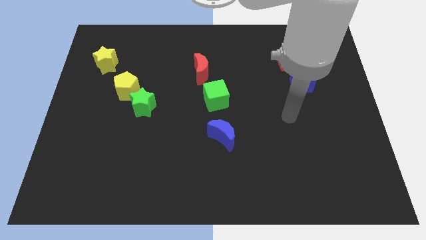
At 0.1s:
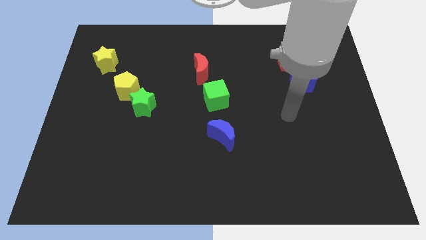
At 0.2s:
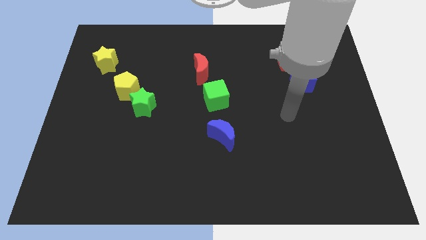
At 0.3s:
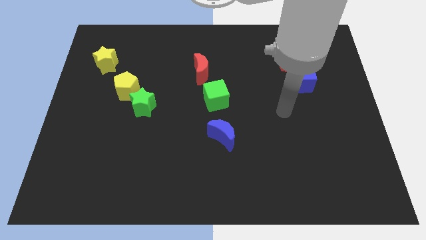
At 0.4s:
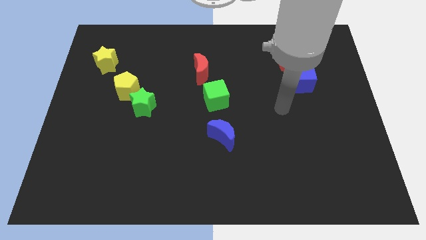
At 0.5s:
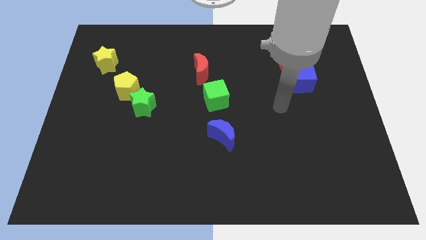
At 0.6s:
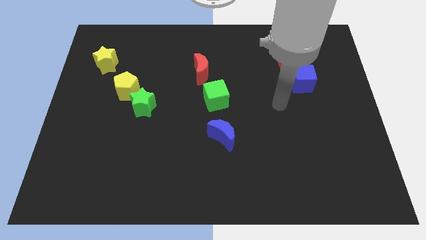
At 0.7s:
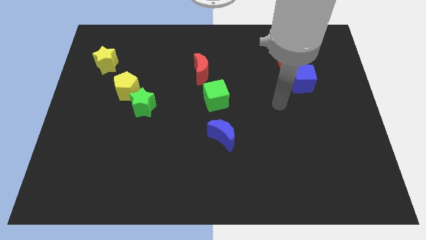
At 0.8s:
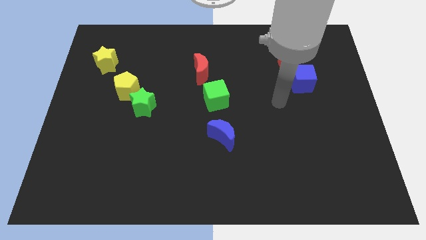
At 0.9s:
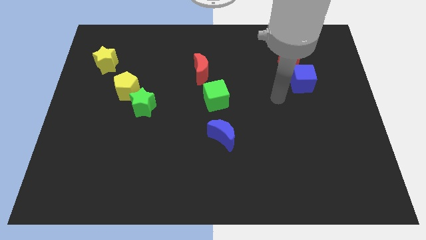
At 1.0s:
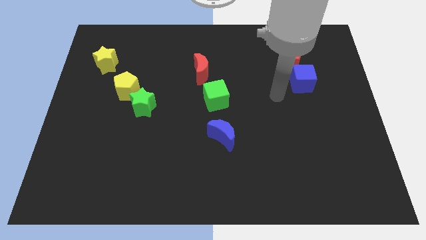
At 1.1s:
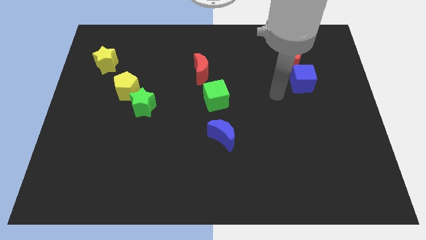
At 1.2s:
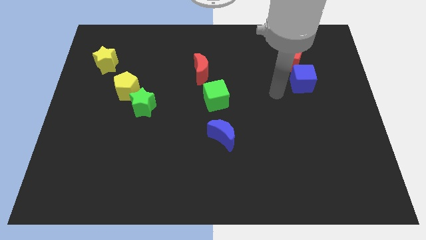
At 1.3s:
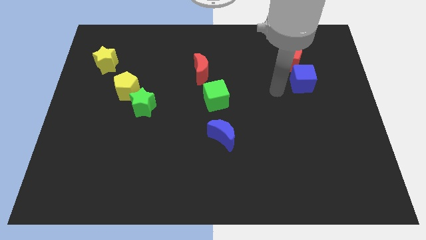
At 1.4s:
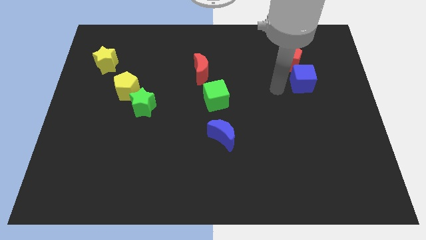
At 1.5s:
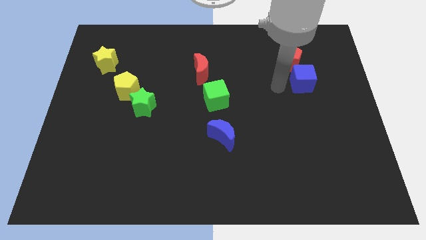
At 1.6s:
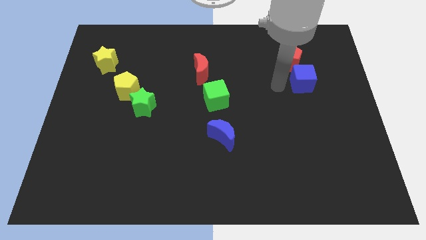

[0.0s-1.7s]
move the arm to the left of the blue cube

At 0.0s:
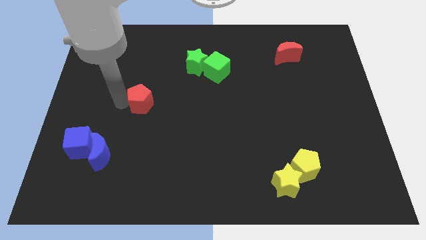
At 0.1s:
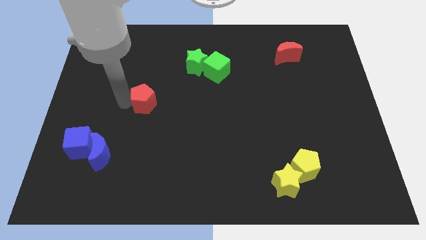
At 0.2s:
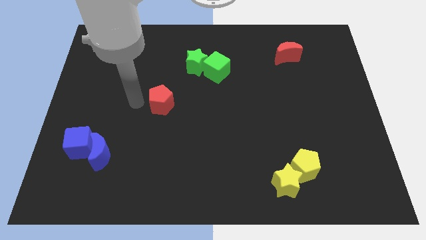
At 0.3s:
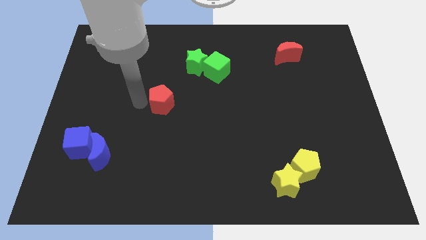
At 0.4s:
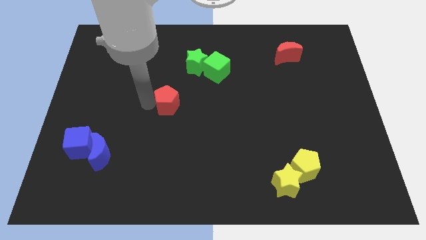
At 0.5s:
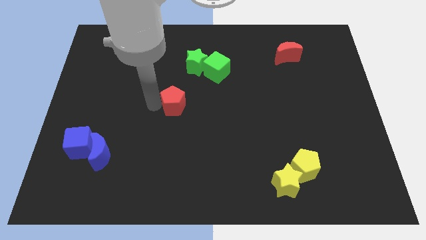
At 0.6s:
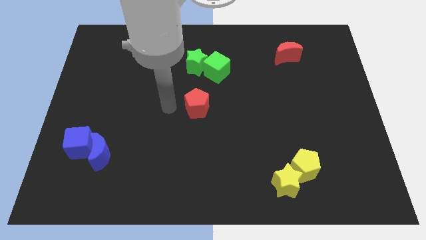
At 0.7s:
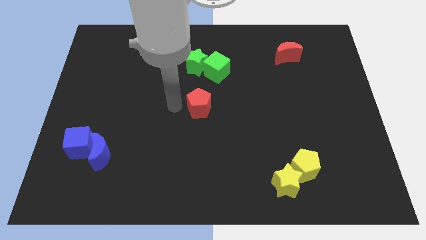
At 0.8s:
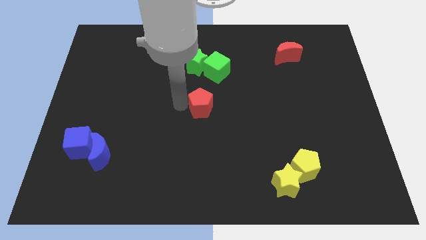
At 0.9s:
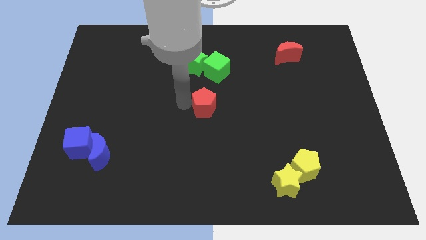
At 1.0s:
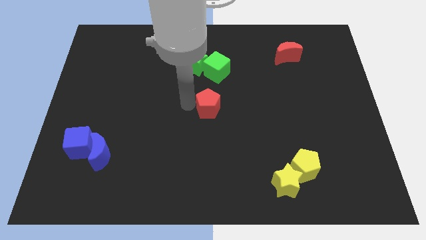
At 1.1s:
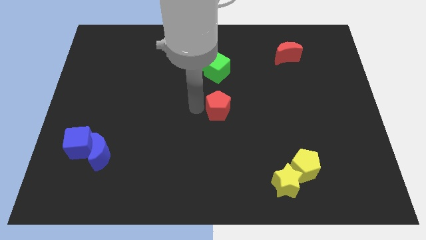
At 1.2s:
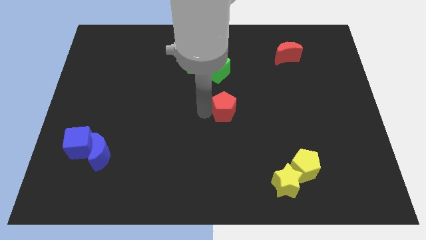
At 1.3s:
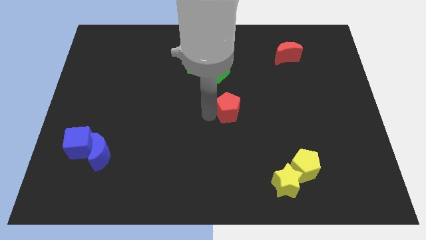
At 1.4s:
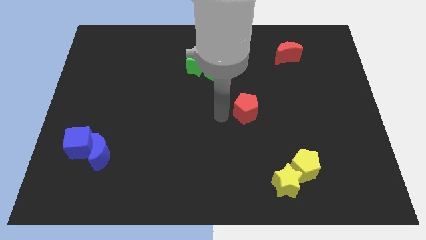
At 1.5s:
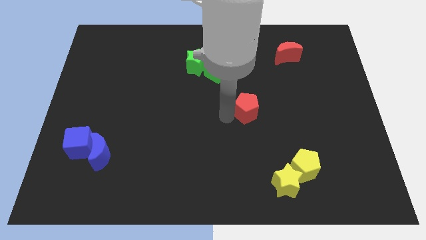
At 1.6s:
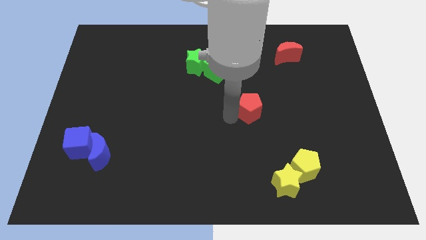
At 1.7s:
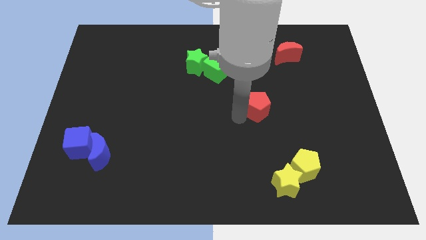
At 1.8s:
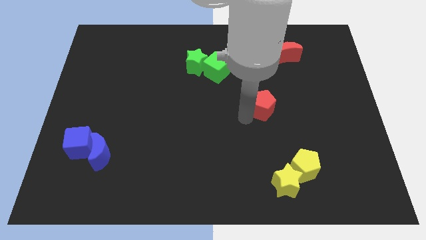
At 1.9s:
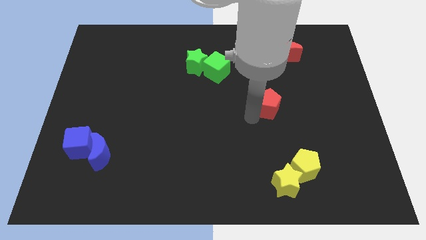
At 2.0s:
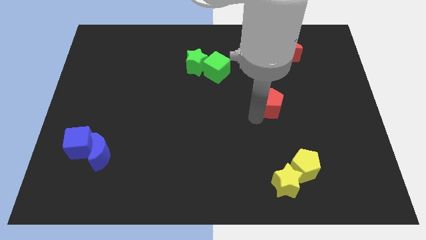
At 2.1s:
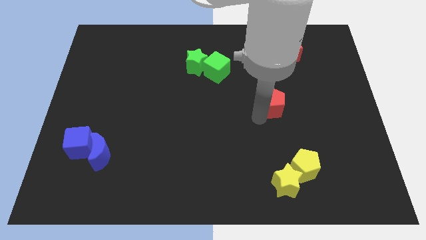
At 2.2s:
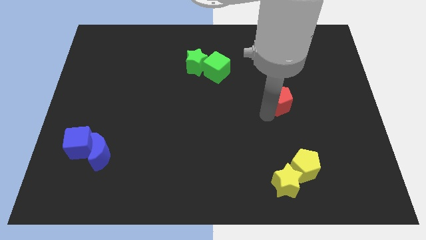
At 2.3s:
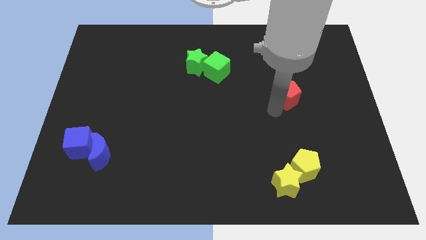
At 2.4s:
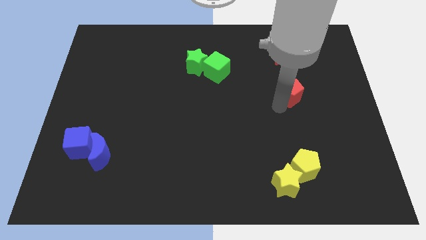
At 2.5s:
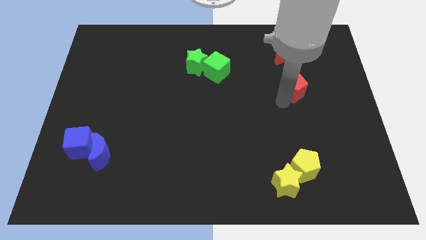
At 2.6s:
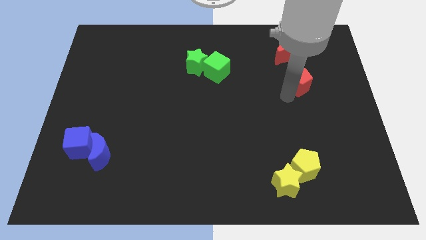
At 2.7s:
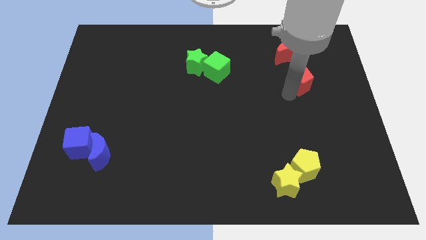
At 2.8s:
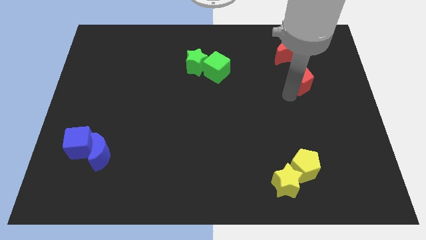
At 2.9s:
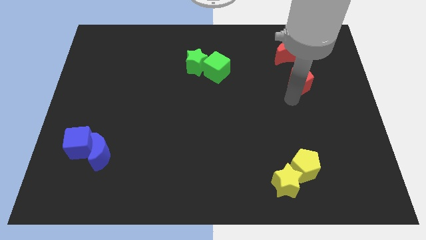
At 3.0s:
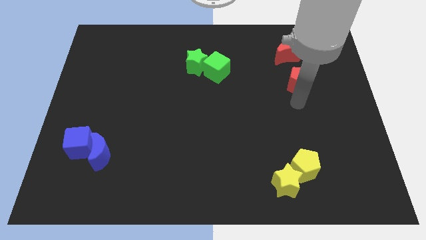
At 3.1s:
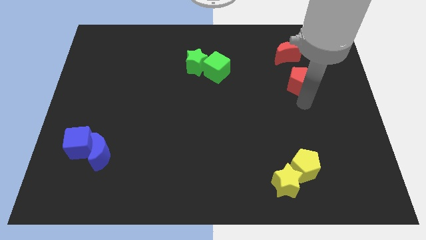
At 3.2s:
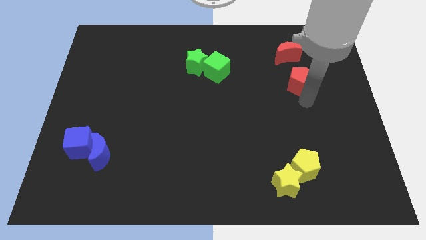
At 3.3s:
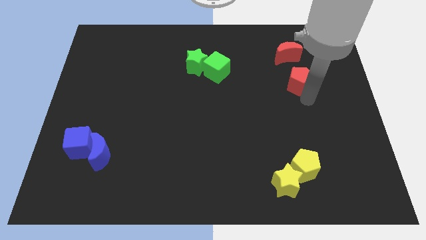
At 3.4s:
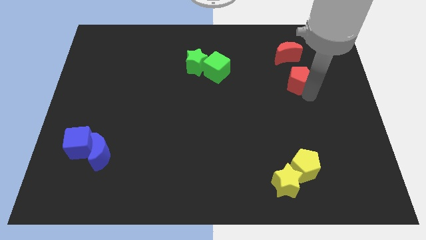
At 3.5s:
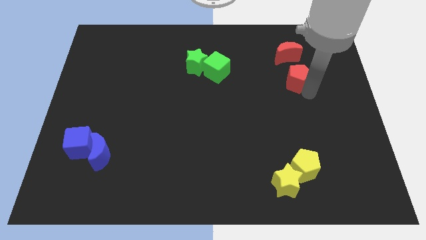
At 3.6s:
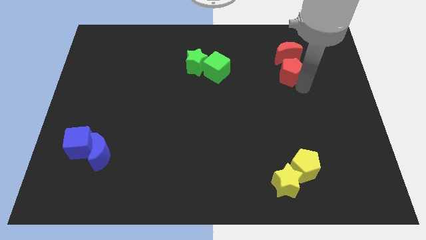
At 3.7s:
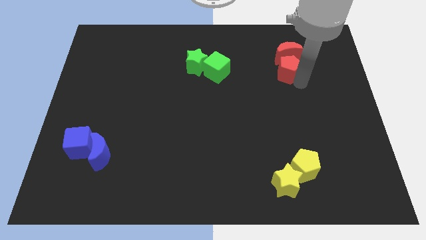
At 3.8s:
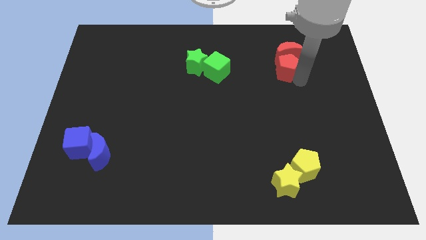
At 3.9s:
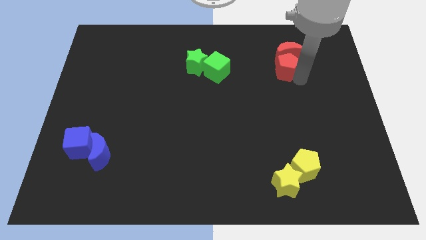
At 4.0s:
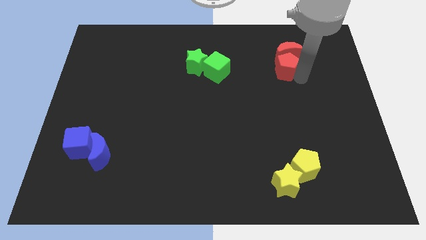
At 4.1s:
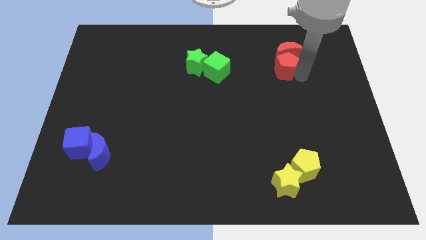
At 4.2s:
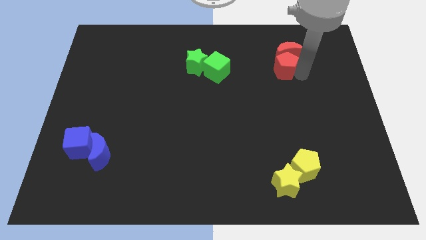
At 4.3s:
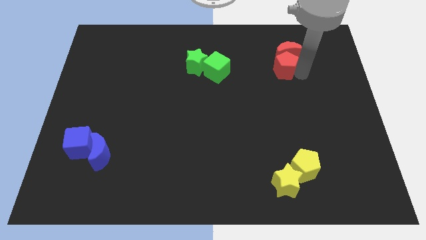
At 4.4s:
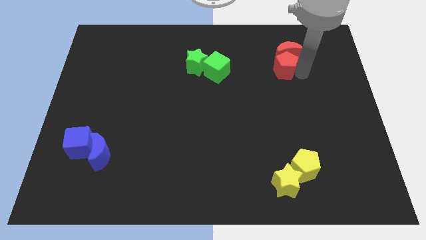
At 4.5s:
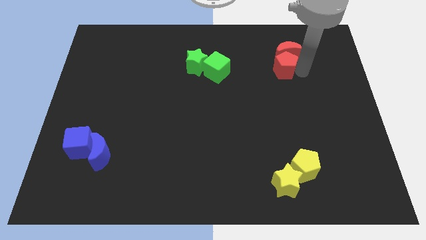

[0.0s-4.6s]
move the red pentagon into the bottom side of the red crescent

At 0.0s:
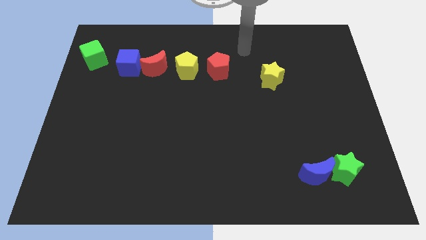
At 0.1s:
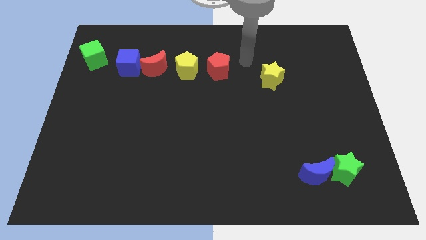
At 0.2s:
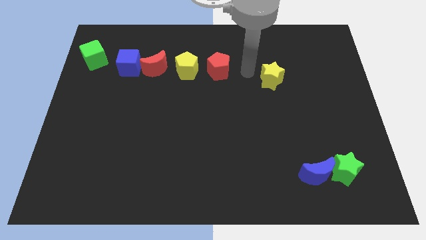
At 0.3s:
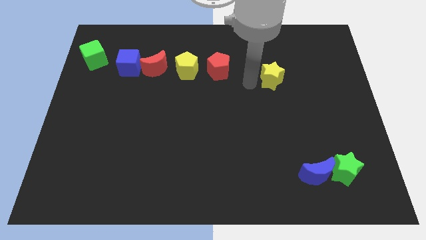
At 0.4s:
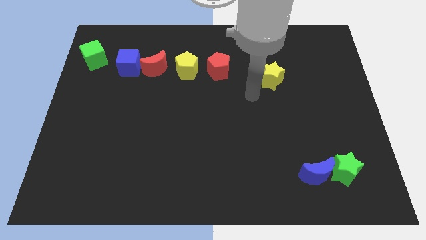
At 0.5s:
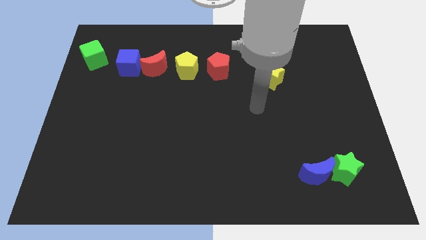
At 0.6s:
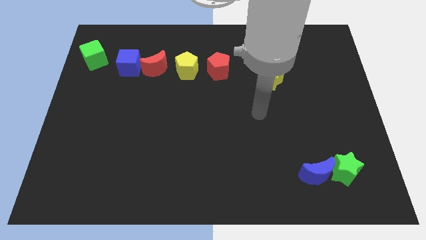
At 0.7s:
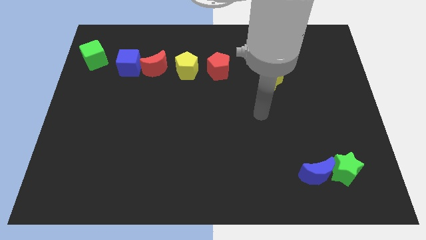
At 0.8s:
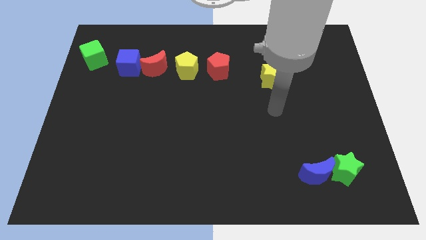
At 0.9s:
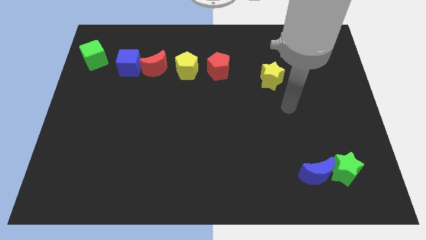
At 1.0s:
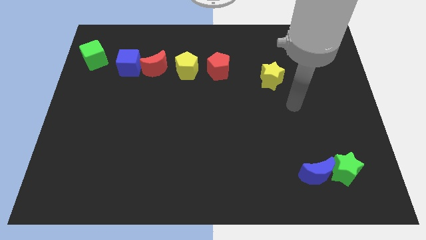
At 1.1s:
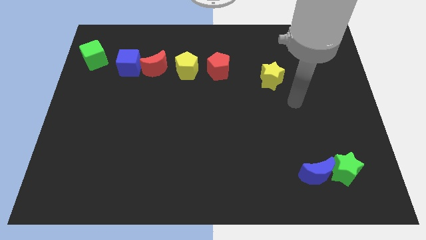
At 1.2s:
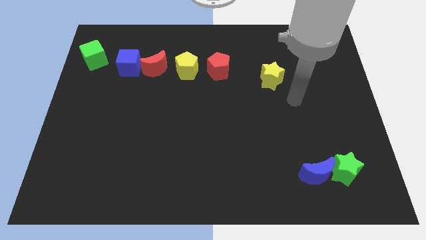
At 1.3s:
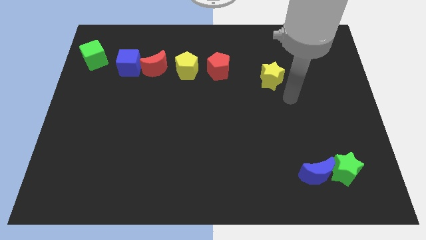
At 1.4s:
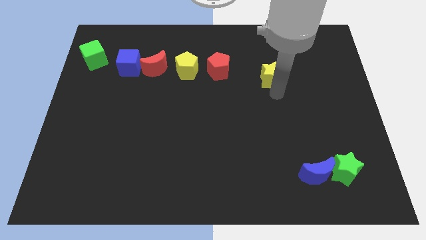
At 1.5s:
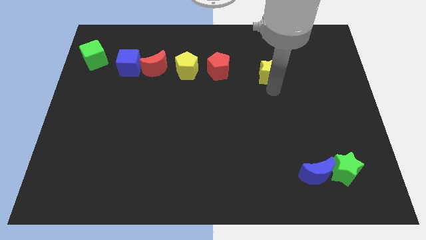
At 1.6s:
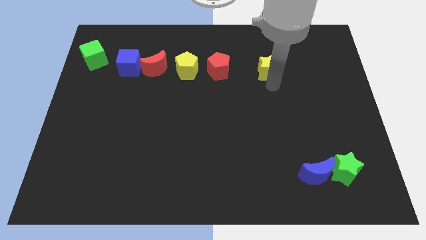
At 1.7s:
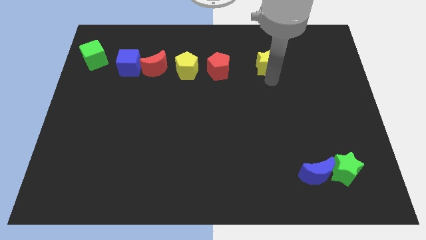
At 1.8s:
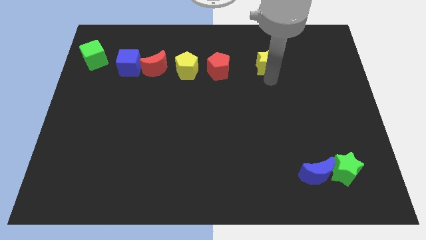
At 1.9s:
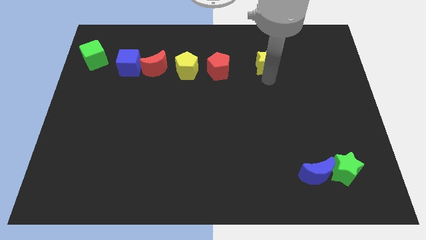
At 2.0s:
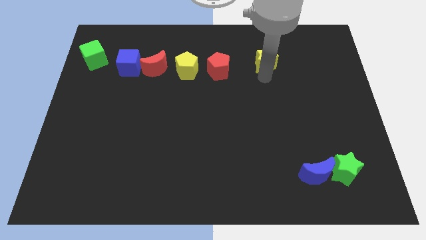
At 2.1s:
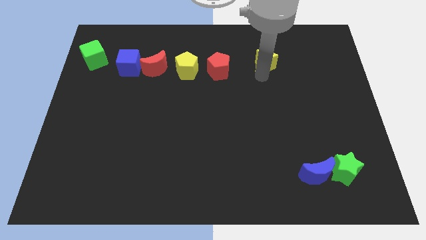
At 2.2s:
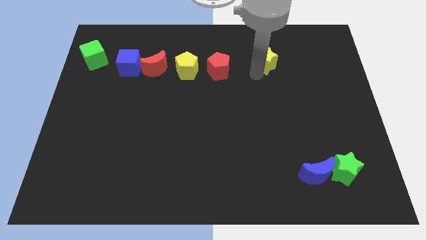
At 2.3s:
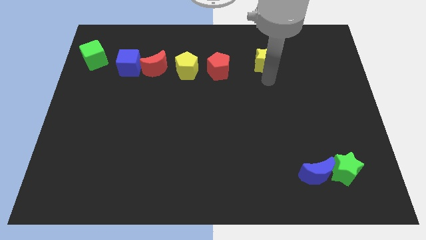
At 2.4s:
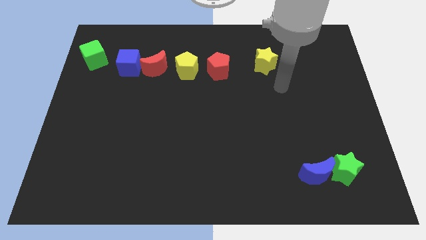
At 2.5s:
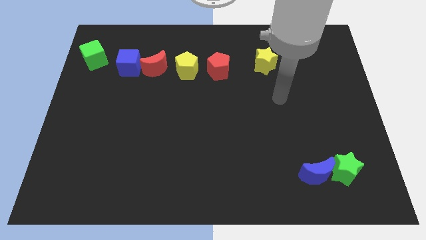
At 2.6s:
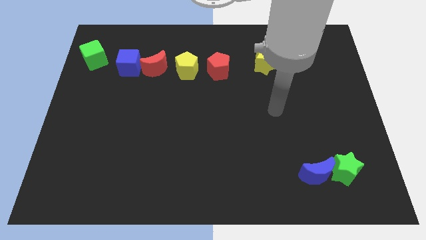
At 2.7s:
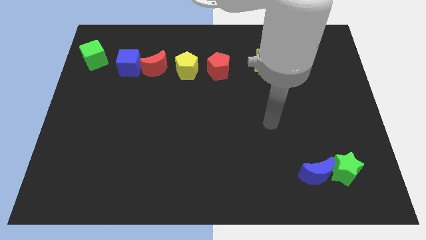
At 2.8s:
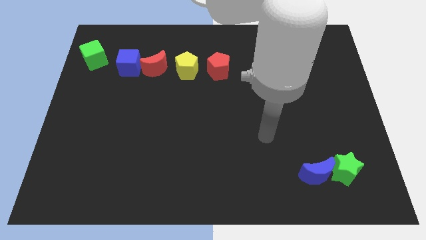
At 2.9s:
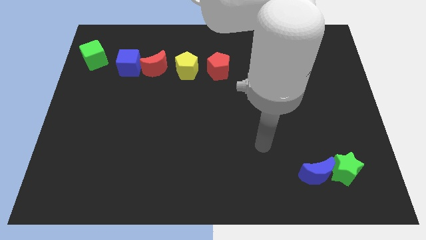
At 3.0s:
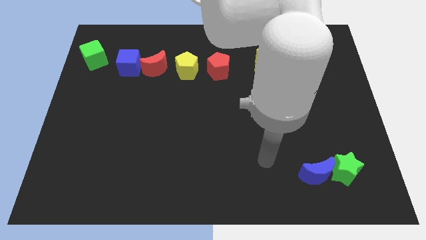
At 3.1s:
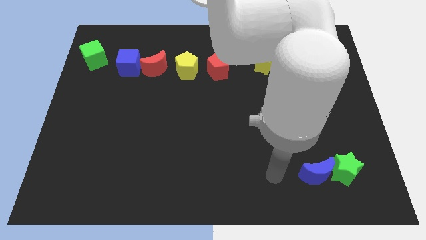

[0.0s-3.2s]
place yellow star to the right of red pentagon
